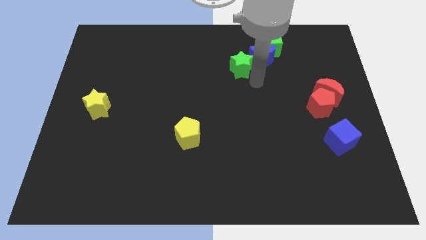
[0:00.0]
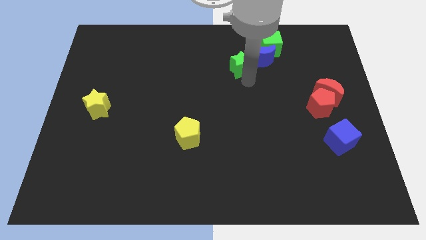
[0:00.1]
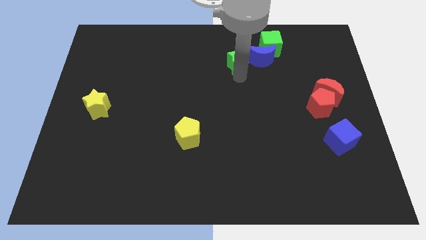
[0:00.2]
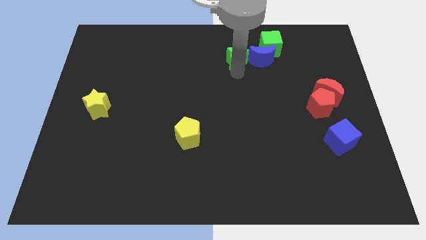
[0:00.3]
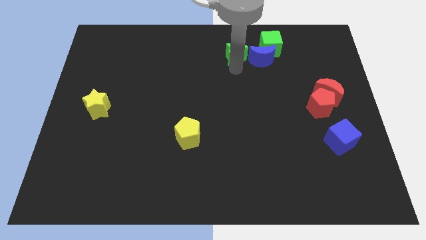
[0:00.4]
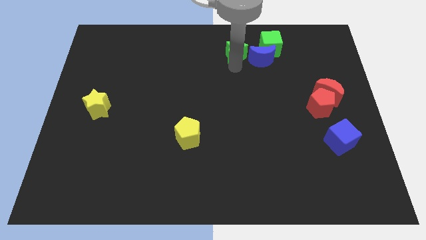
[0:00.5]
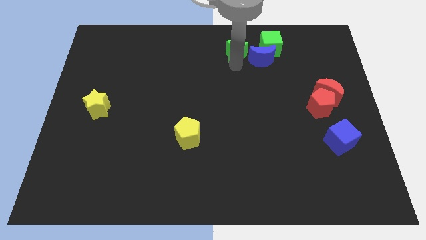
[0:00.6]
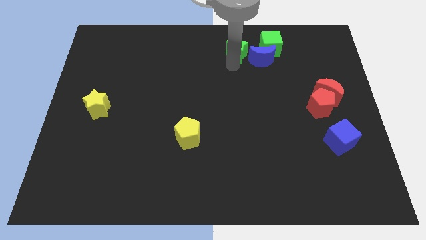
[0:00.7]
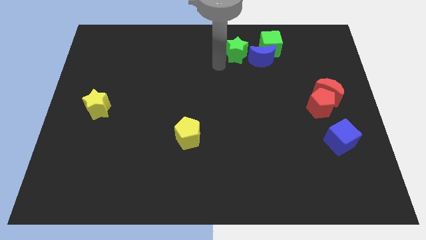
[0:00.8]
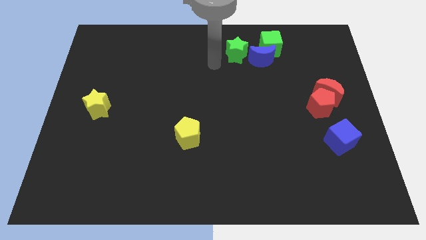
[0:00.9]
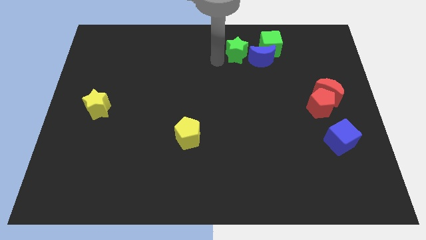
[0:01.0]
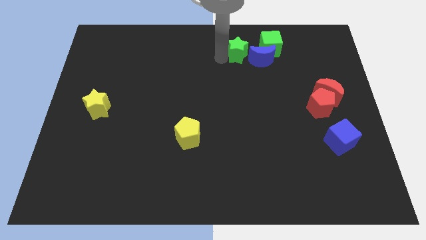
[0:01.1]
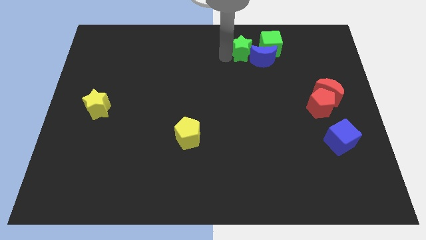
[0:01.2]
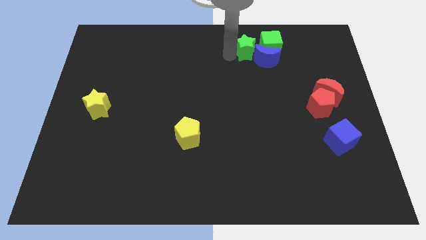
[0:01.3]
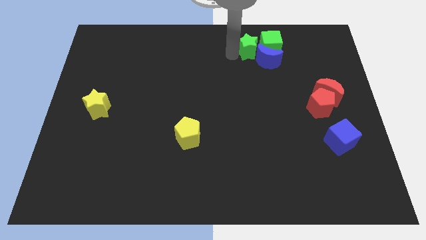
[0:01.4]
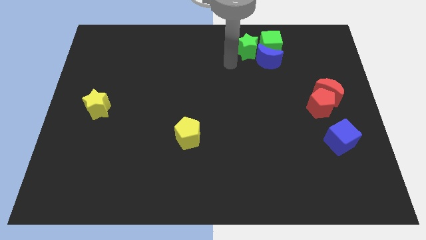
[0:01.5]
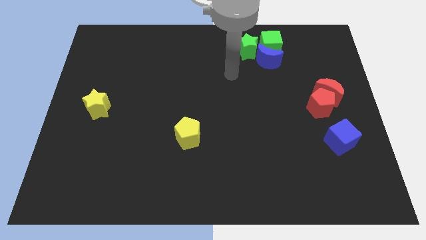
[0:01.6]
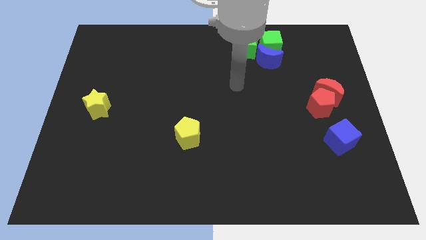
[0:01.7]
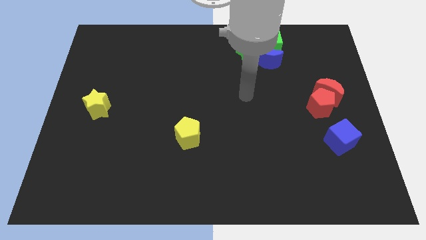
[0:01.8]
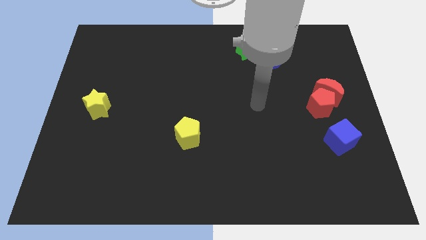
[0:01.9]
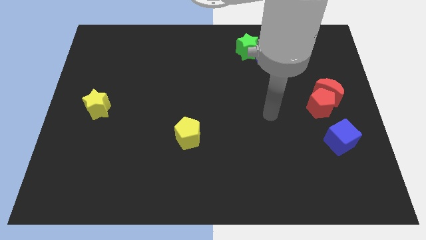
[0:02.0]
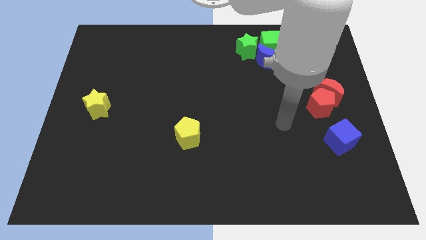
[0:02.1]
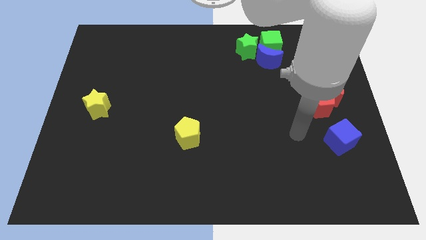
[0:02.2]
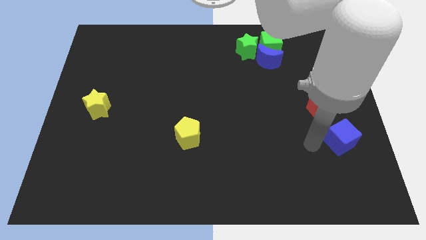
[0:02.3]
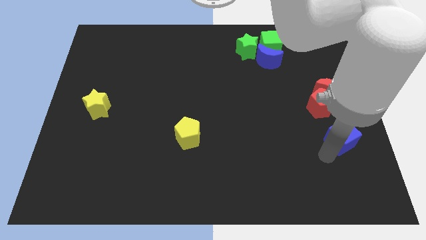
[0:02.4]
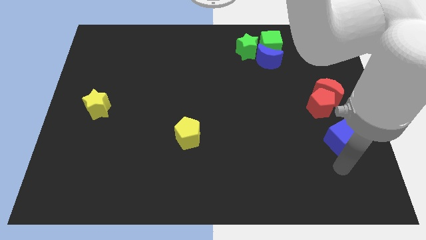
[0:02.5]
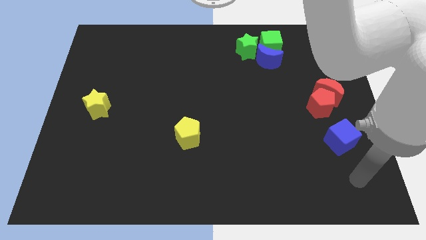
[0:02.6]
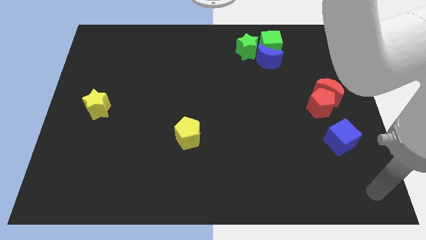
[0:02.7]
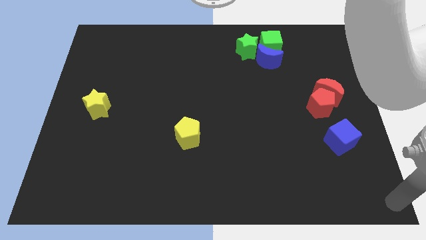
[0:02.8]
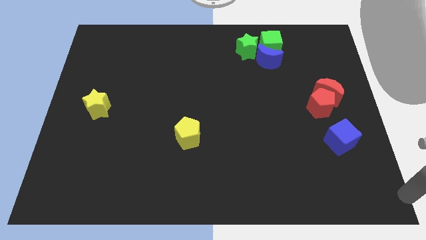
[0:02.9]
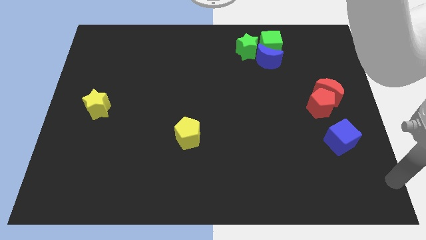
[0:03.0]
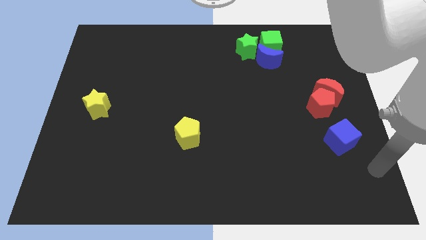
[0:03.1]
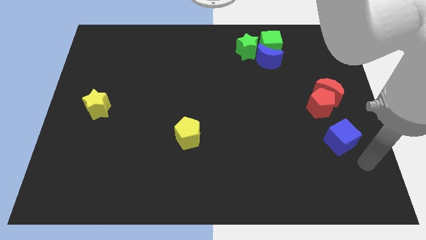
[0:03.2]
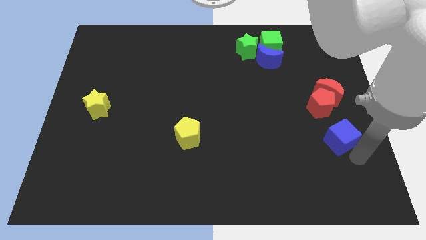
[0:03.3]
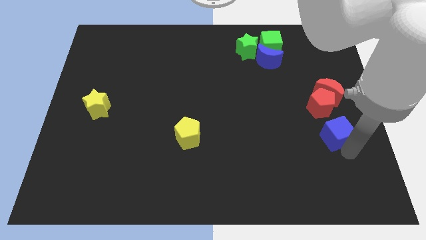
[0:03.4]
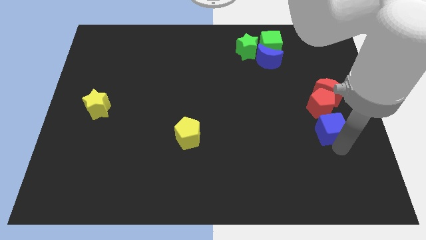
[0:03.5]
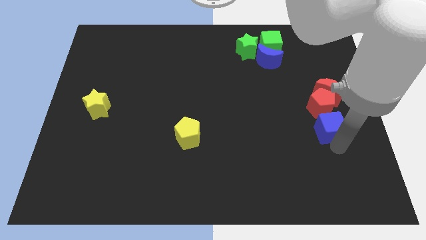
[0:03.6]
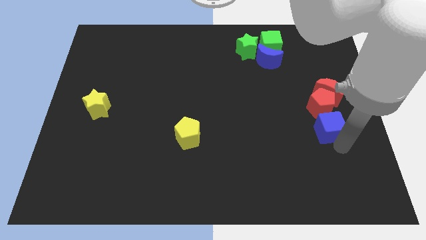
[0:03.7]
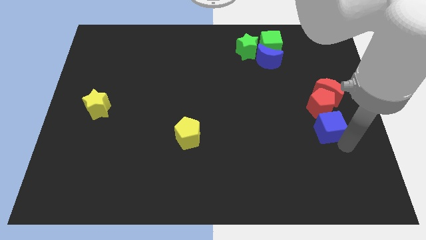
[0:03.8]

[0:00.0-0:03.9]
place green star left to the green square

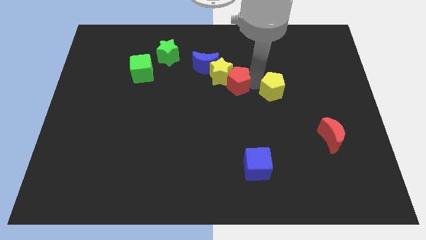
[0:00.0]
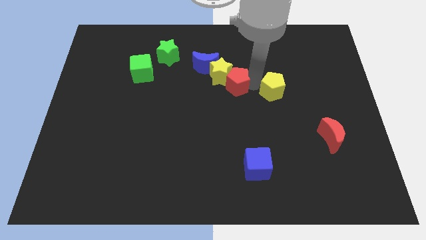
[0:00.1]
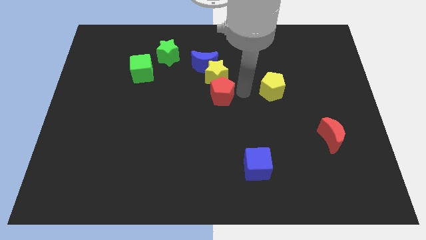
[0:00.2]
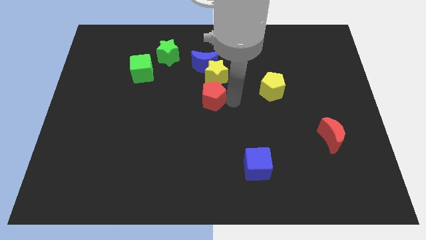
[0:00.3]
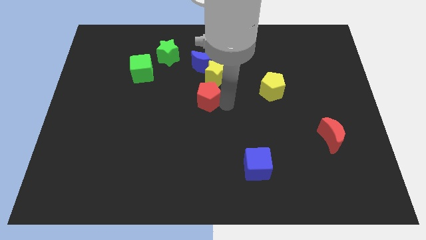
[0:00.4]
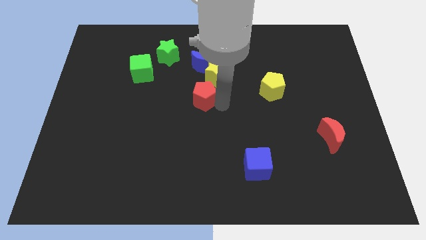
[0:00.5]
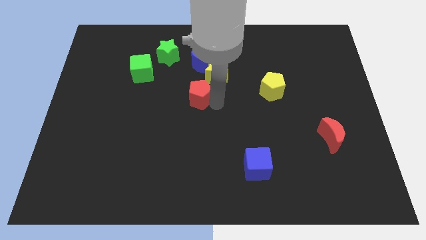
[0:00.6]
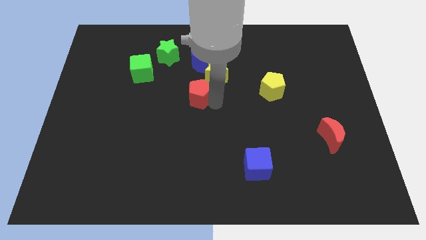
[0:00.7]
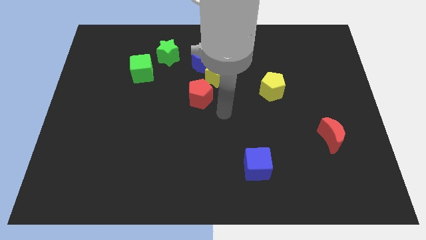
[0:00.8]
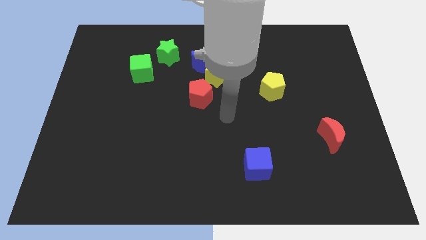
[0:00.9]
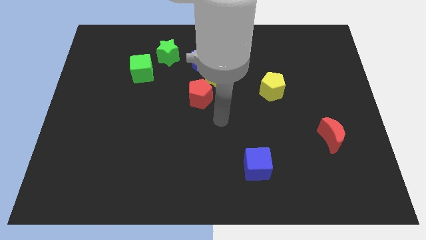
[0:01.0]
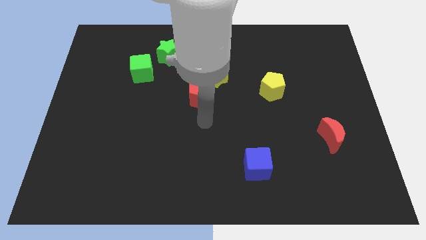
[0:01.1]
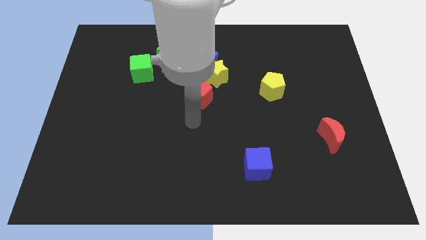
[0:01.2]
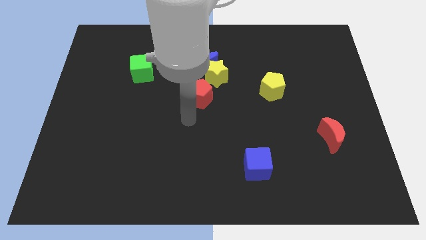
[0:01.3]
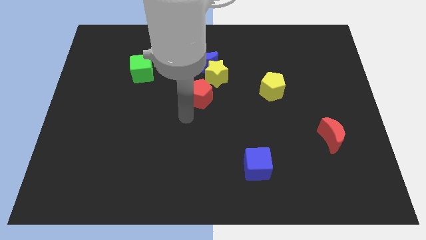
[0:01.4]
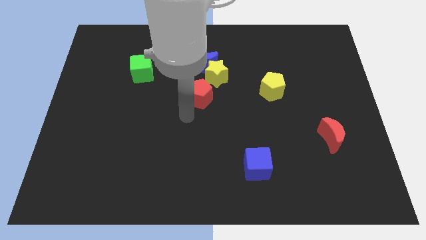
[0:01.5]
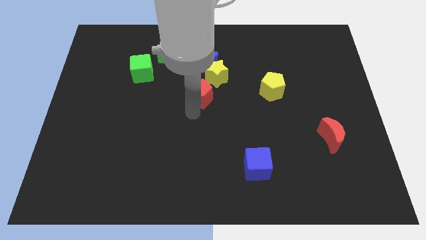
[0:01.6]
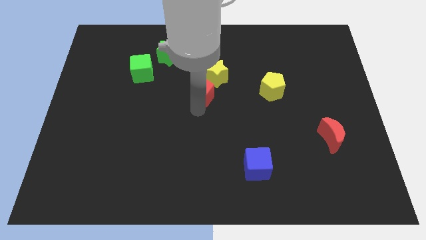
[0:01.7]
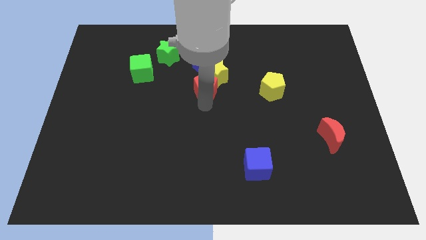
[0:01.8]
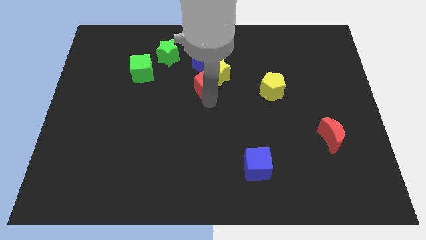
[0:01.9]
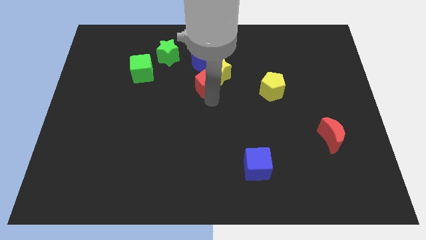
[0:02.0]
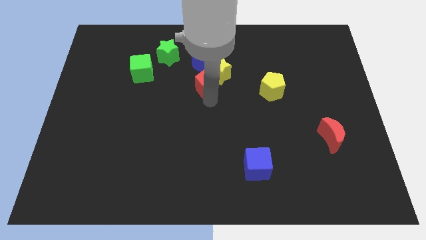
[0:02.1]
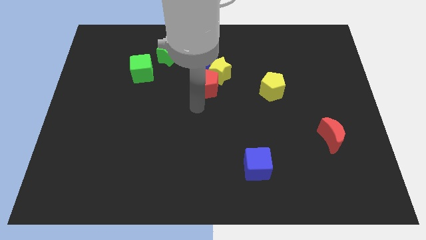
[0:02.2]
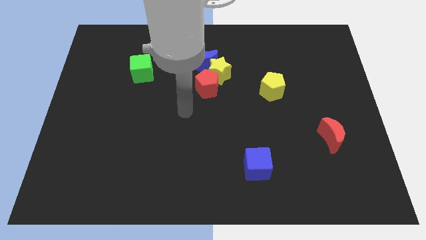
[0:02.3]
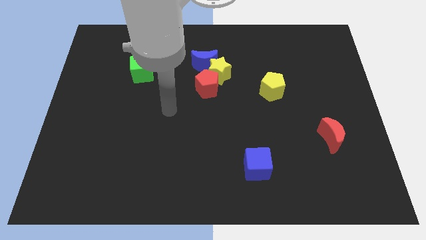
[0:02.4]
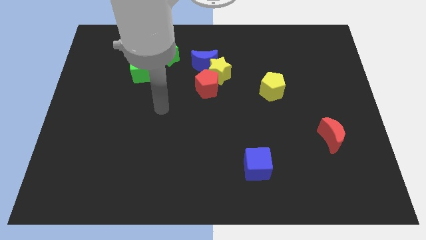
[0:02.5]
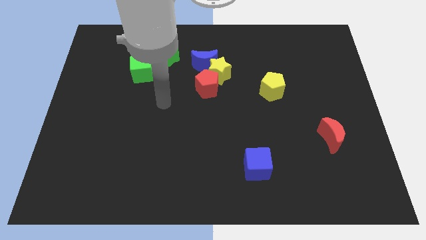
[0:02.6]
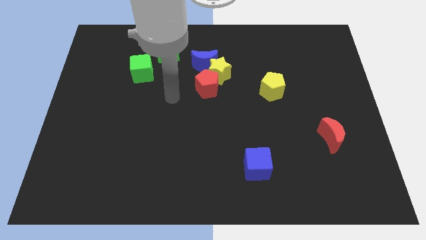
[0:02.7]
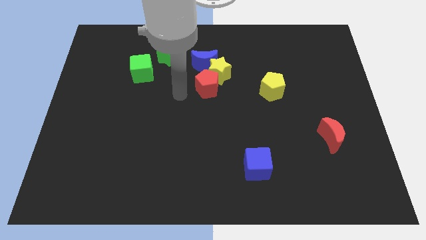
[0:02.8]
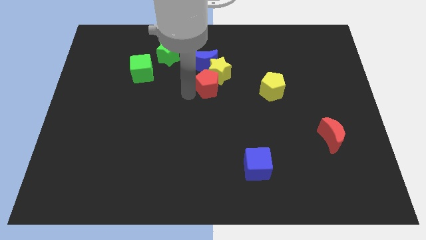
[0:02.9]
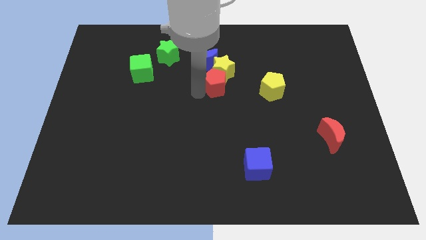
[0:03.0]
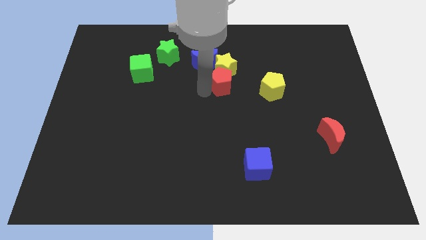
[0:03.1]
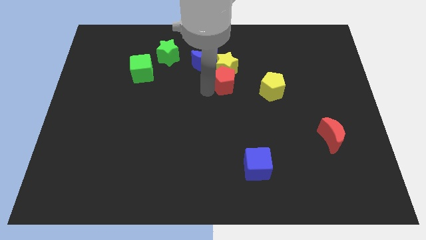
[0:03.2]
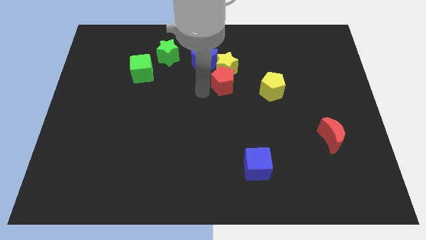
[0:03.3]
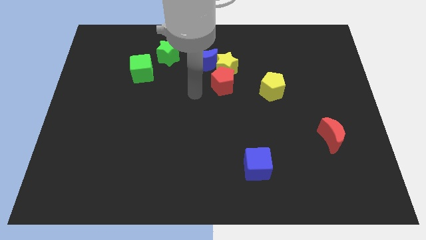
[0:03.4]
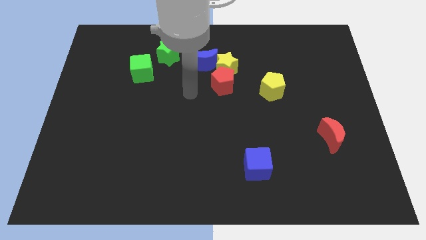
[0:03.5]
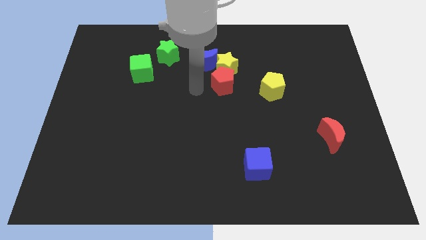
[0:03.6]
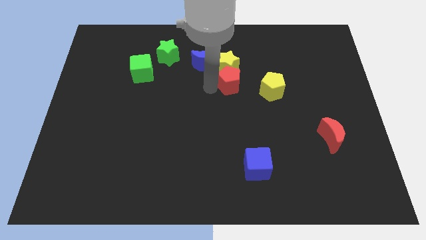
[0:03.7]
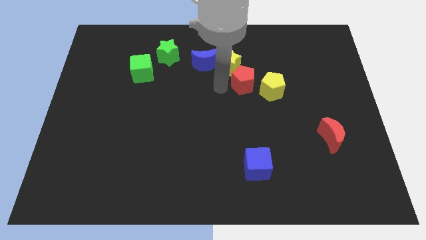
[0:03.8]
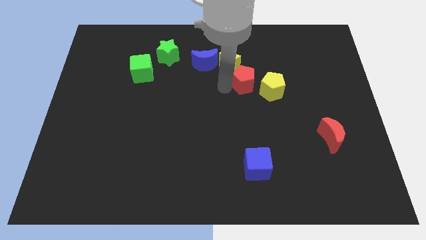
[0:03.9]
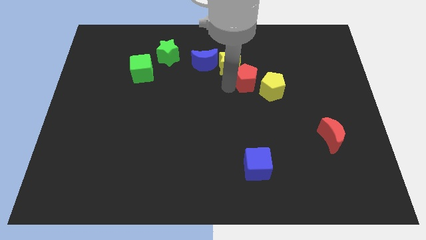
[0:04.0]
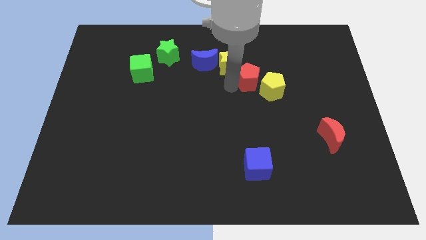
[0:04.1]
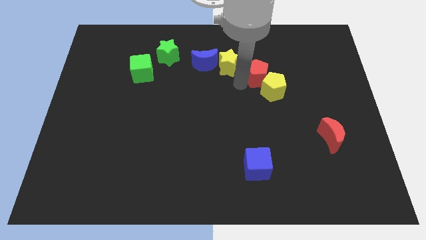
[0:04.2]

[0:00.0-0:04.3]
place the red pentagon diagonally in between both the yellow blocks

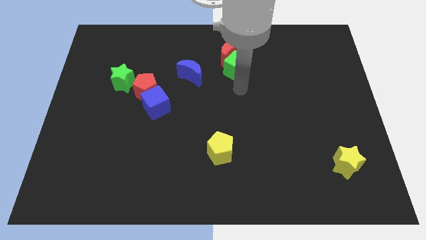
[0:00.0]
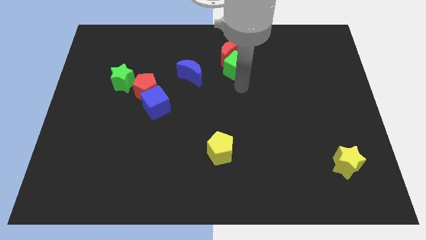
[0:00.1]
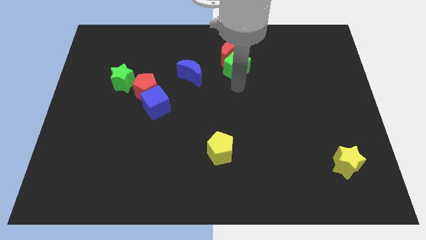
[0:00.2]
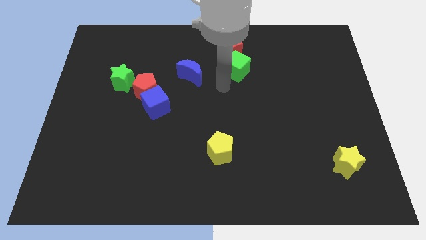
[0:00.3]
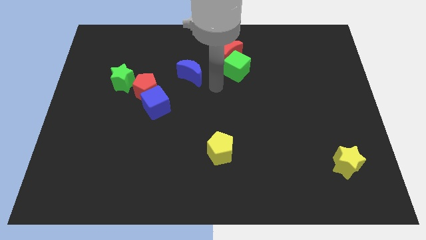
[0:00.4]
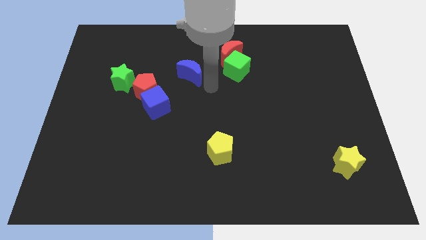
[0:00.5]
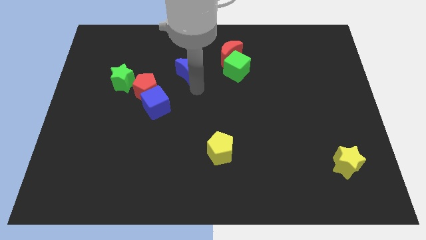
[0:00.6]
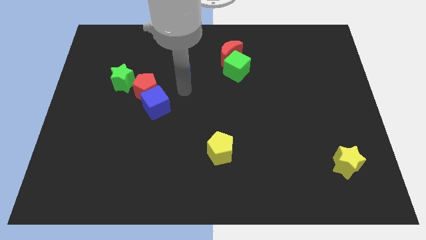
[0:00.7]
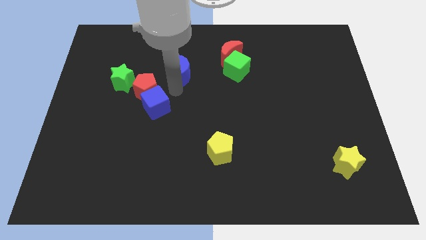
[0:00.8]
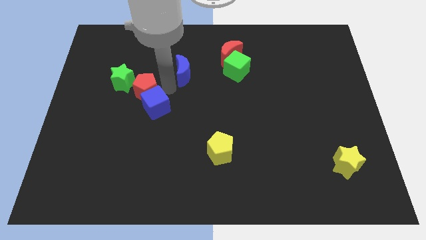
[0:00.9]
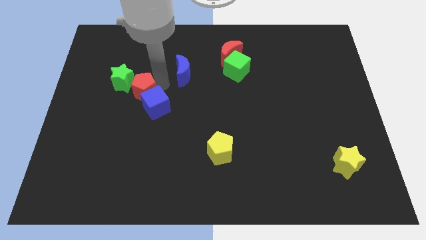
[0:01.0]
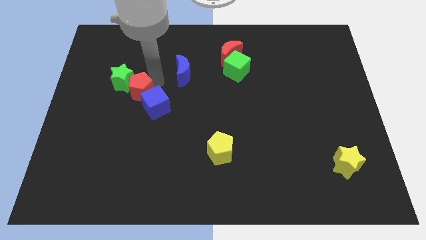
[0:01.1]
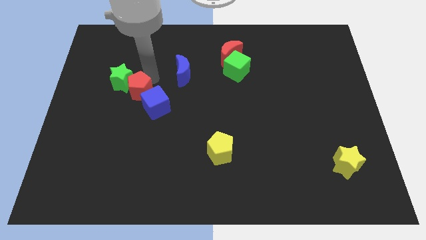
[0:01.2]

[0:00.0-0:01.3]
move your arm towards red pentagon
